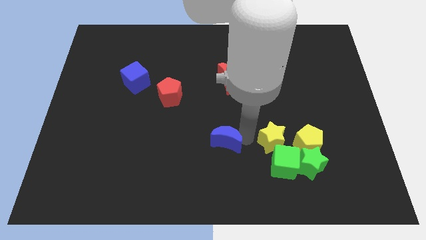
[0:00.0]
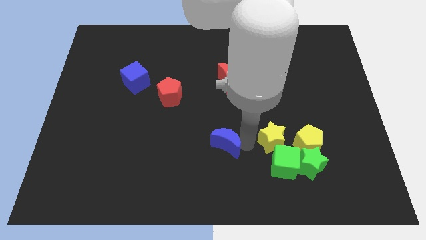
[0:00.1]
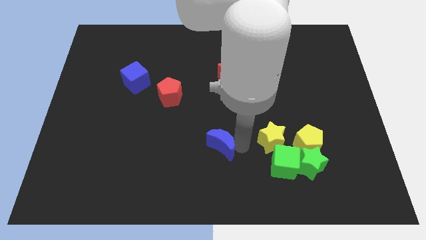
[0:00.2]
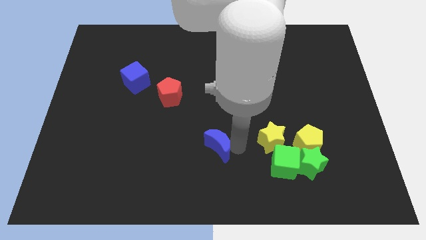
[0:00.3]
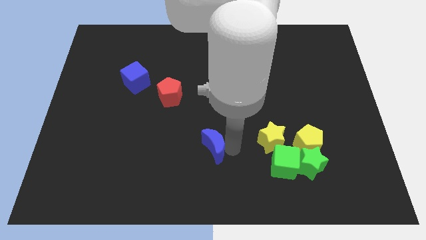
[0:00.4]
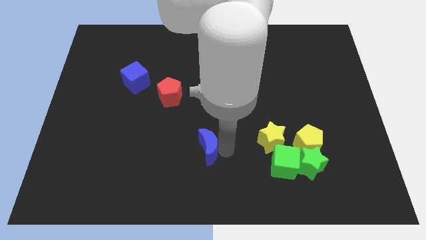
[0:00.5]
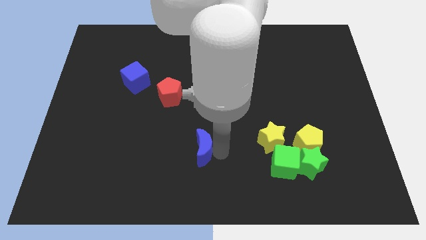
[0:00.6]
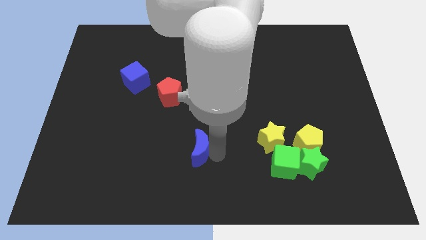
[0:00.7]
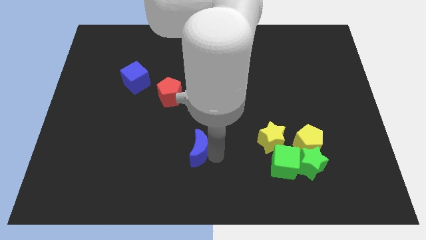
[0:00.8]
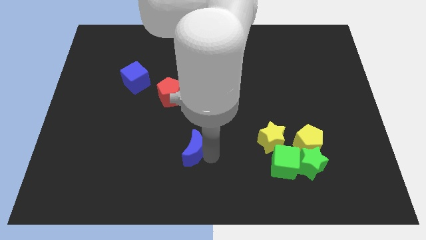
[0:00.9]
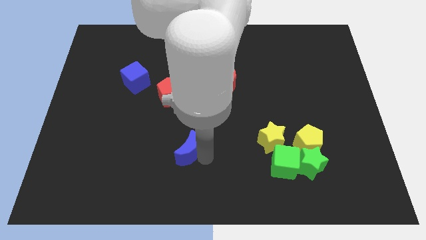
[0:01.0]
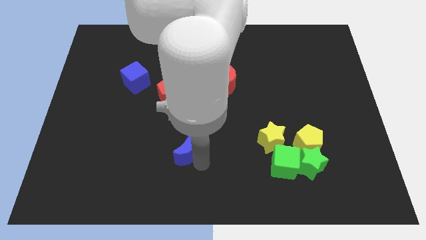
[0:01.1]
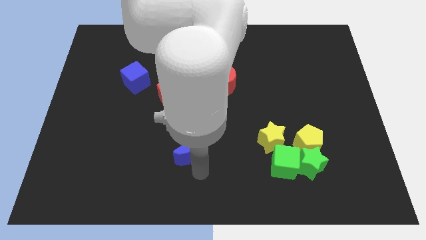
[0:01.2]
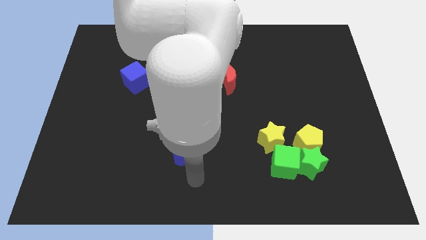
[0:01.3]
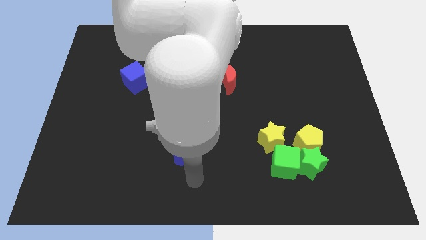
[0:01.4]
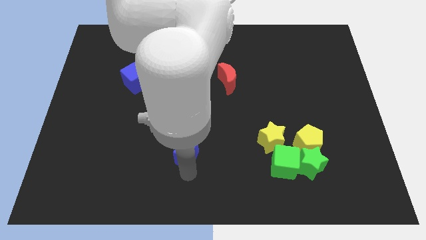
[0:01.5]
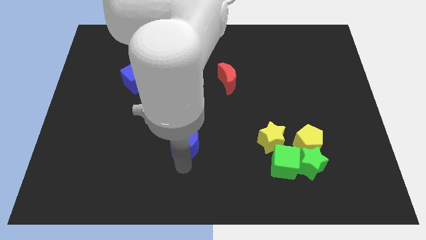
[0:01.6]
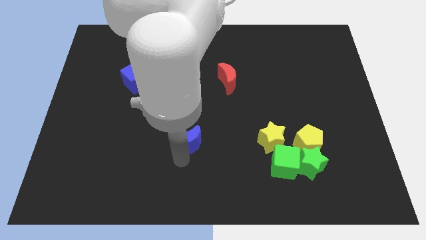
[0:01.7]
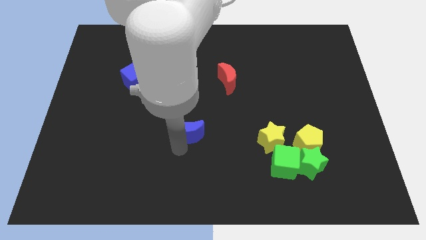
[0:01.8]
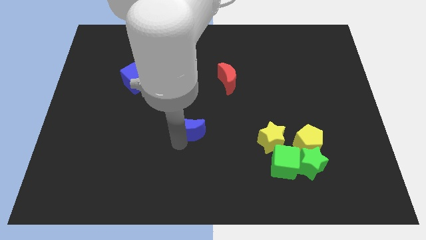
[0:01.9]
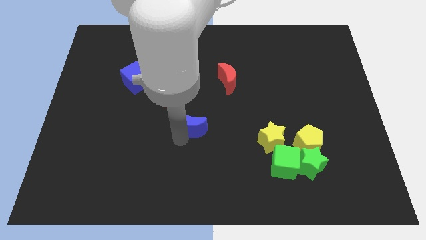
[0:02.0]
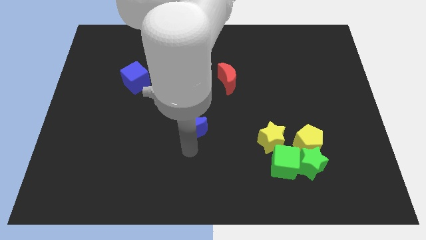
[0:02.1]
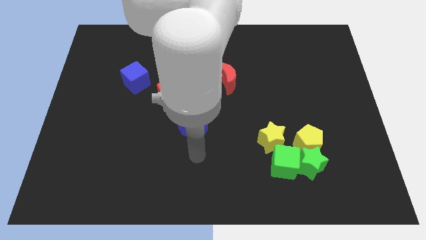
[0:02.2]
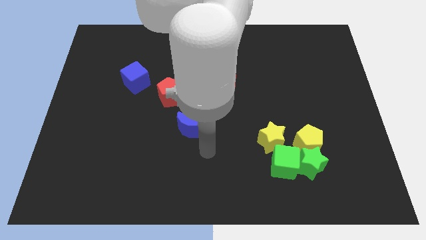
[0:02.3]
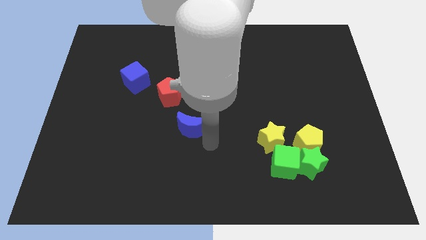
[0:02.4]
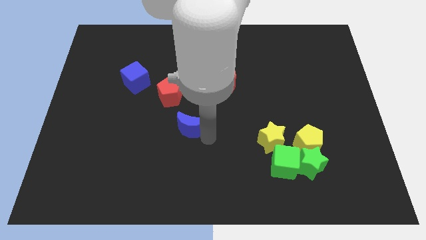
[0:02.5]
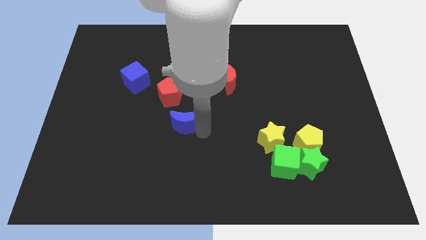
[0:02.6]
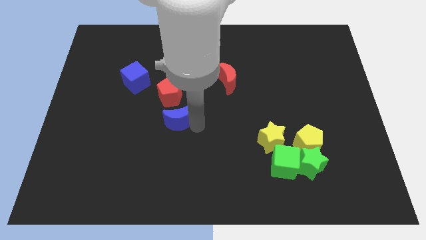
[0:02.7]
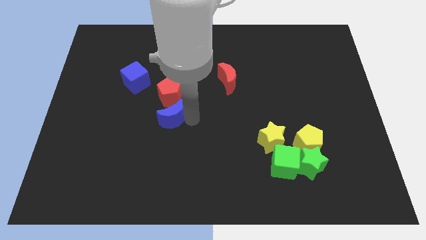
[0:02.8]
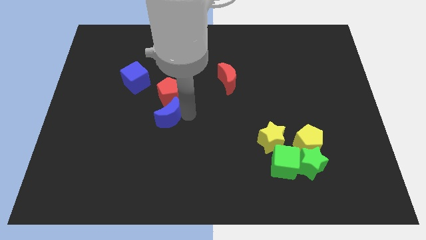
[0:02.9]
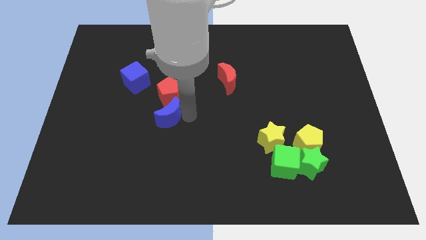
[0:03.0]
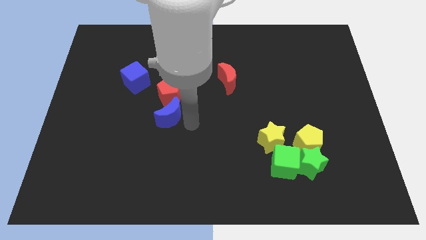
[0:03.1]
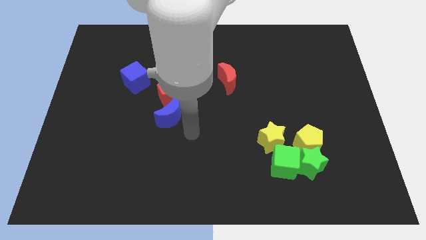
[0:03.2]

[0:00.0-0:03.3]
push the blue crescent to the bottom of the red pentagon

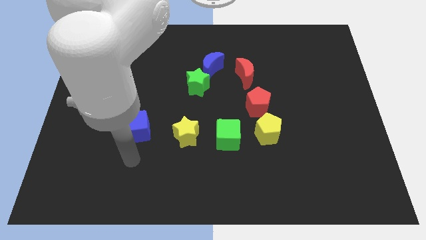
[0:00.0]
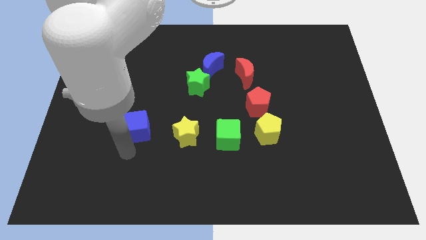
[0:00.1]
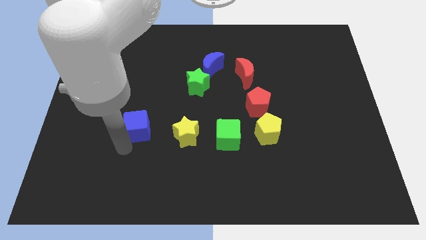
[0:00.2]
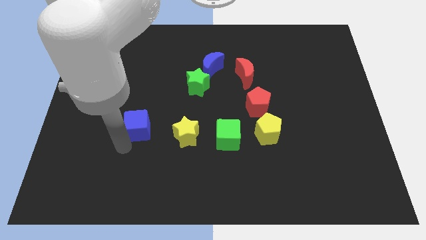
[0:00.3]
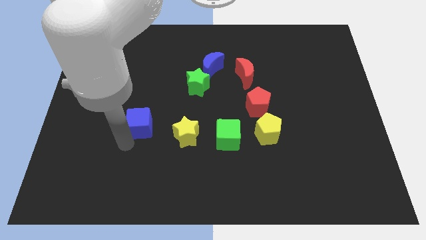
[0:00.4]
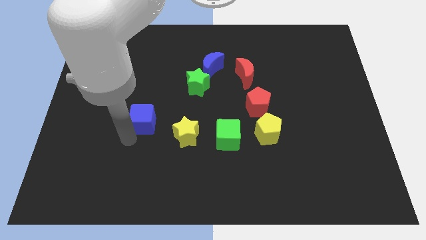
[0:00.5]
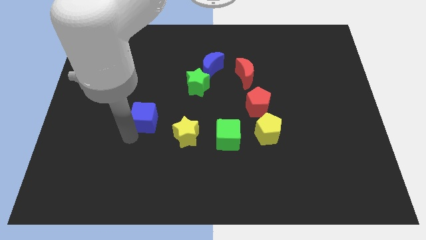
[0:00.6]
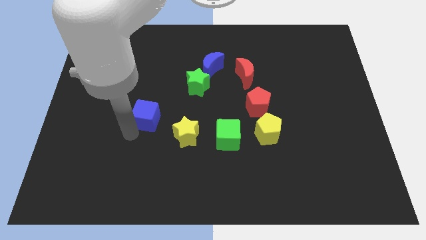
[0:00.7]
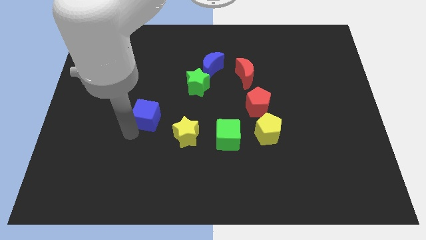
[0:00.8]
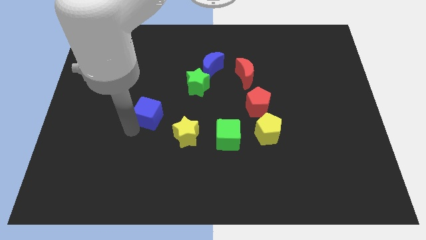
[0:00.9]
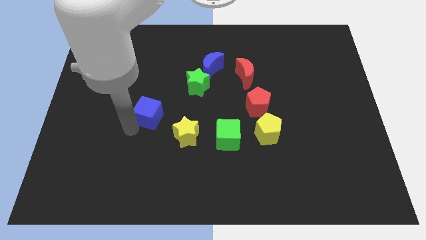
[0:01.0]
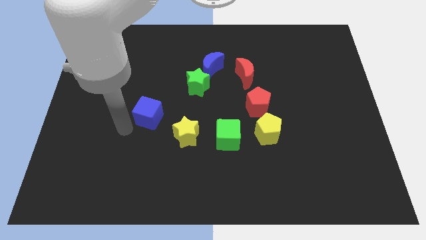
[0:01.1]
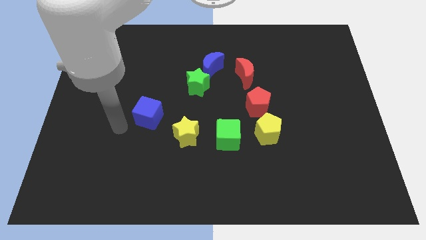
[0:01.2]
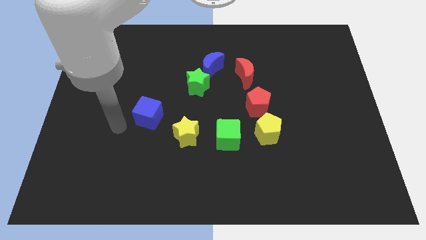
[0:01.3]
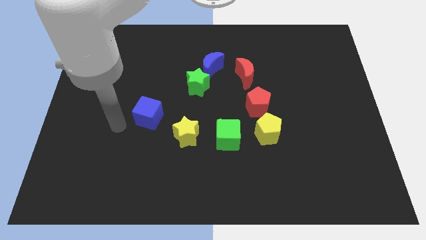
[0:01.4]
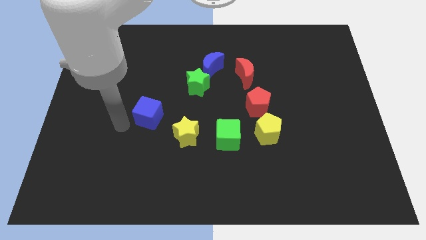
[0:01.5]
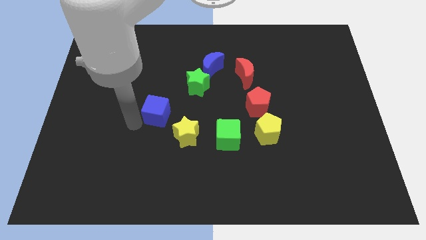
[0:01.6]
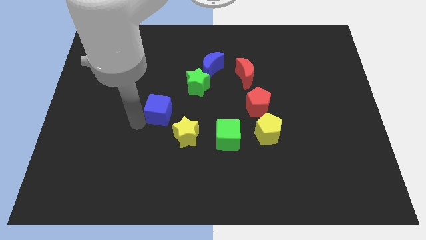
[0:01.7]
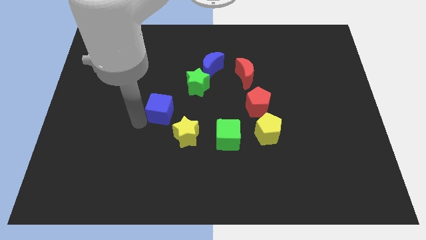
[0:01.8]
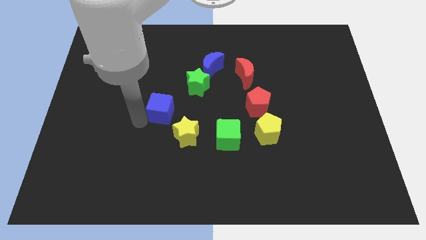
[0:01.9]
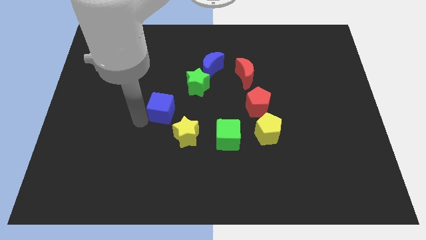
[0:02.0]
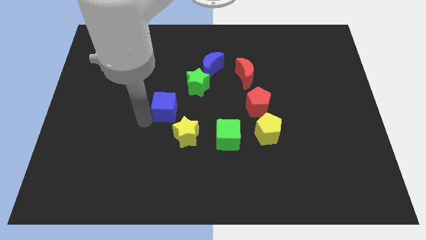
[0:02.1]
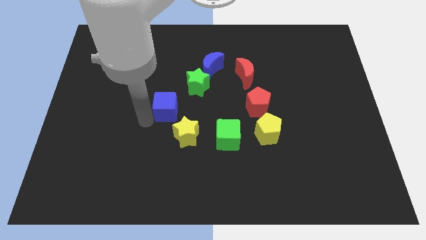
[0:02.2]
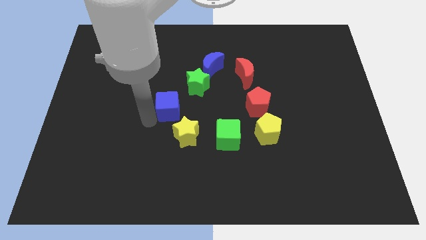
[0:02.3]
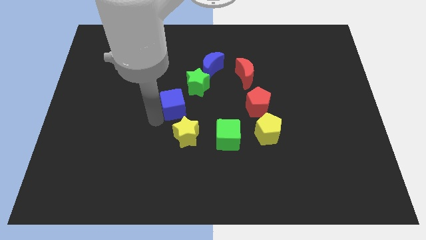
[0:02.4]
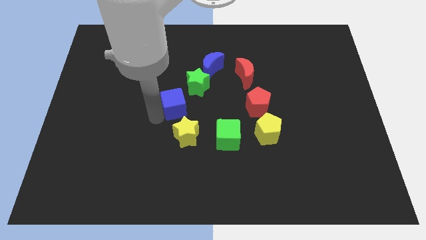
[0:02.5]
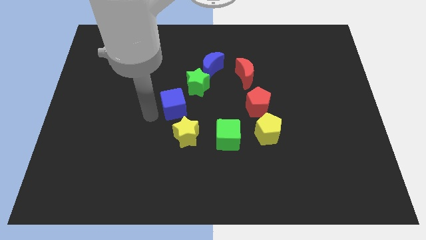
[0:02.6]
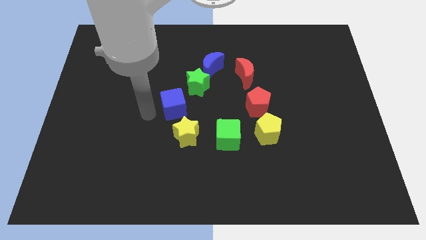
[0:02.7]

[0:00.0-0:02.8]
move the blue cube at the bottom left side of the green star

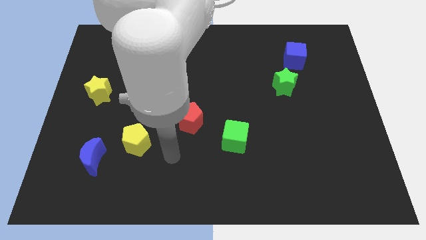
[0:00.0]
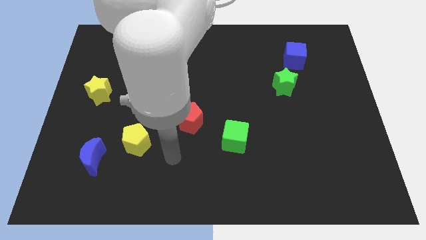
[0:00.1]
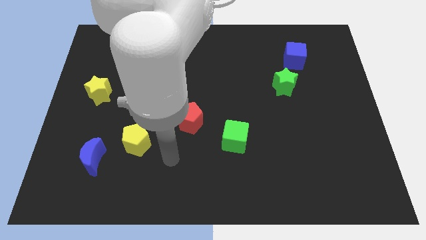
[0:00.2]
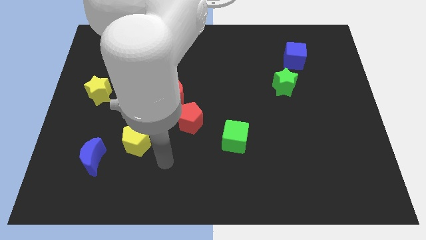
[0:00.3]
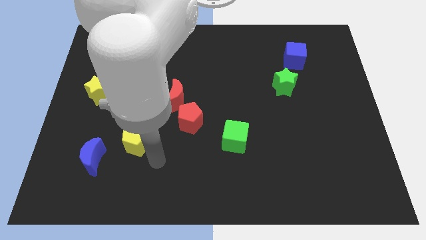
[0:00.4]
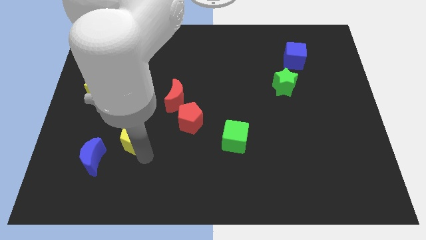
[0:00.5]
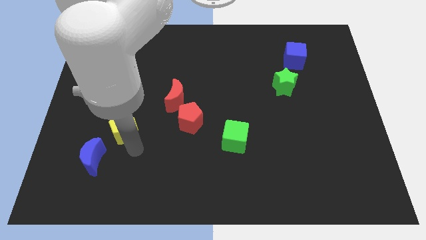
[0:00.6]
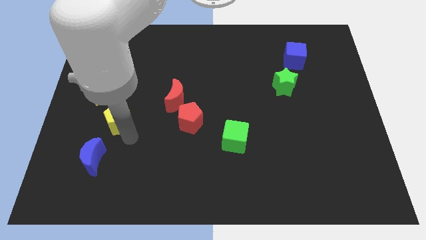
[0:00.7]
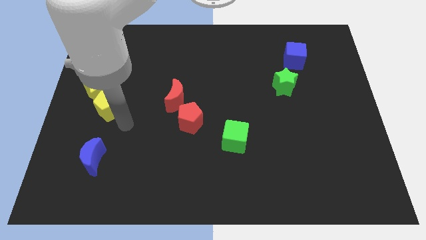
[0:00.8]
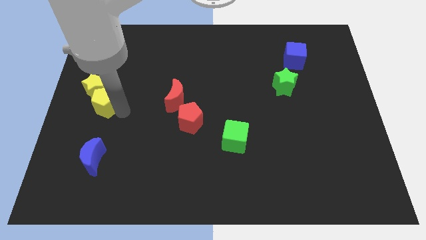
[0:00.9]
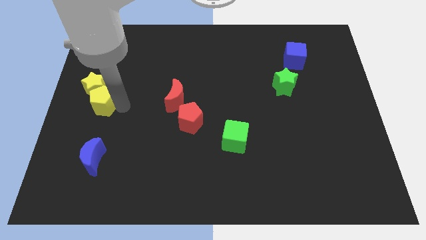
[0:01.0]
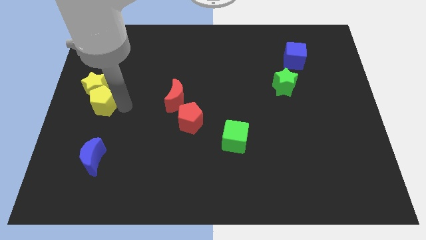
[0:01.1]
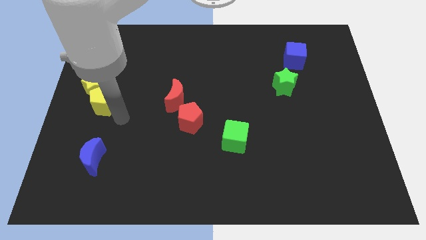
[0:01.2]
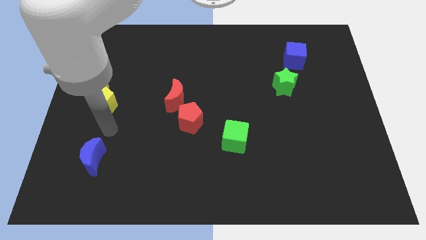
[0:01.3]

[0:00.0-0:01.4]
push the yellow pentagon into the yellow star

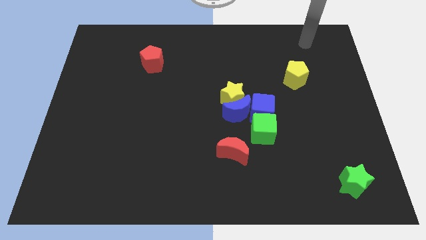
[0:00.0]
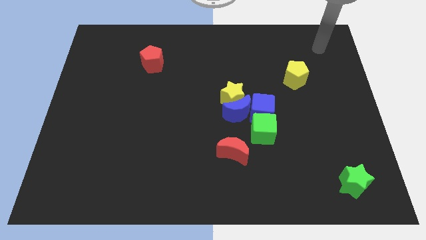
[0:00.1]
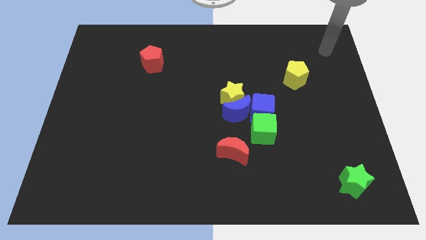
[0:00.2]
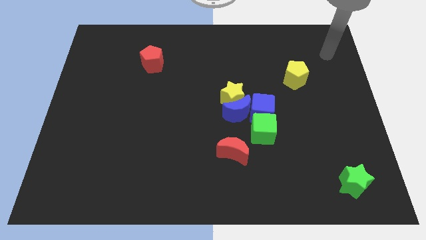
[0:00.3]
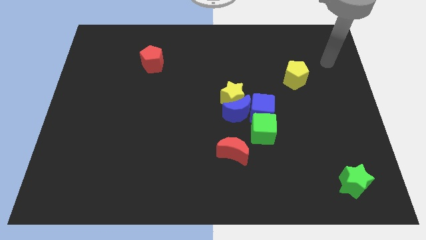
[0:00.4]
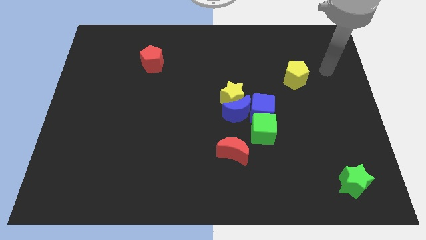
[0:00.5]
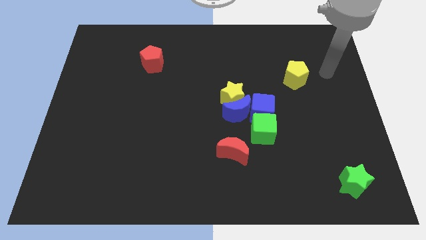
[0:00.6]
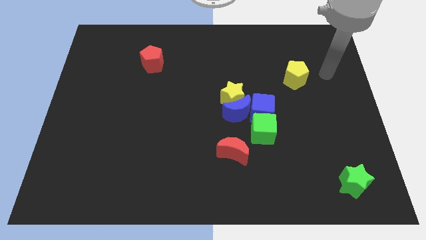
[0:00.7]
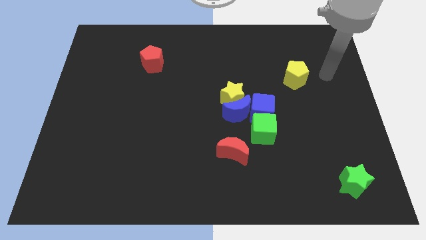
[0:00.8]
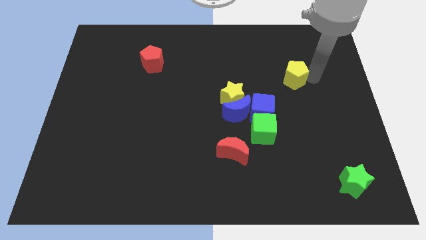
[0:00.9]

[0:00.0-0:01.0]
move arm close to yellow pentagon

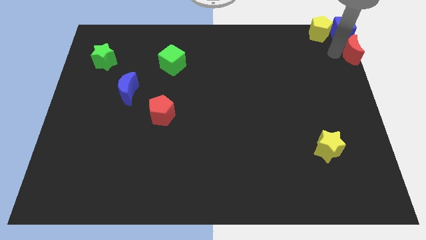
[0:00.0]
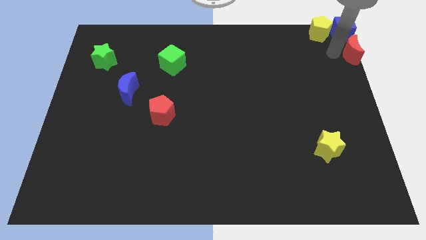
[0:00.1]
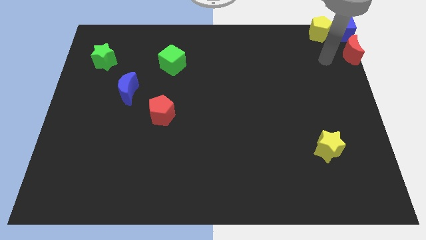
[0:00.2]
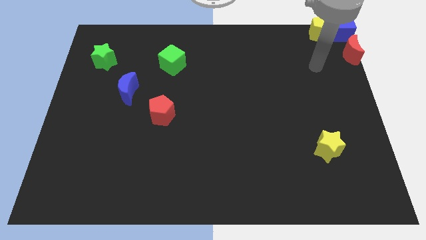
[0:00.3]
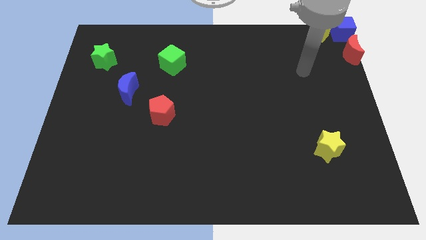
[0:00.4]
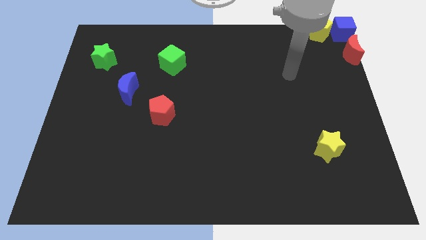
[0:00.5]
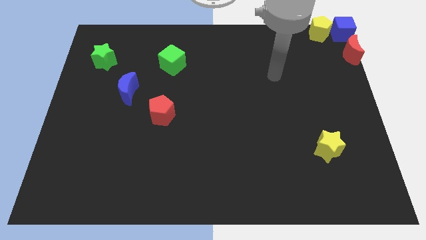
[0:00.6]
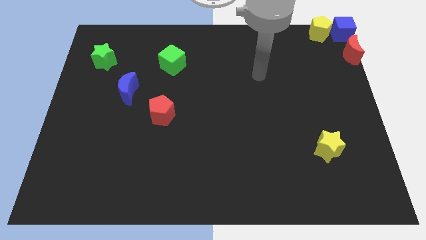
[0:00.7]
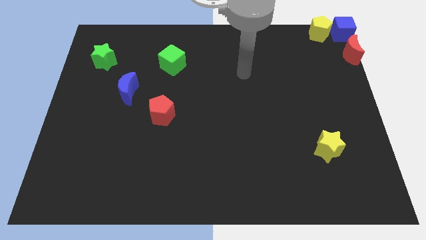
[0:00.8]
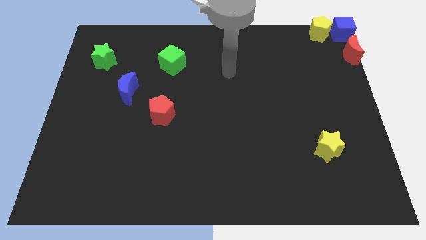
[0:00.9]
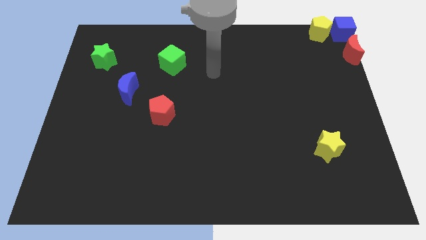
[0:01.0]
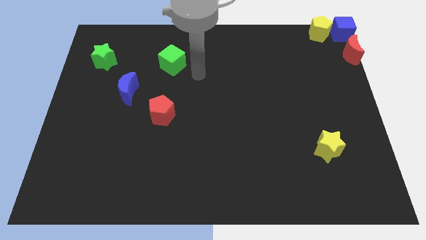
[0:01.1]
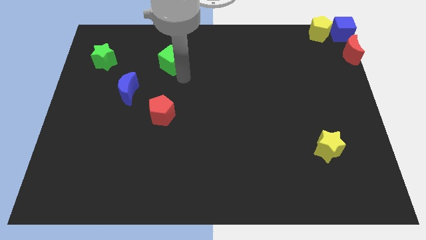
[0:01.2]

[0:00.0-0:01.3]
move your hand towards the green cube
